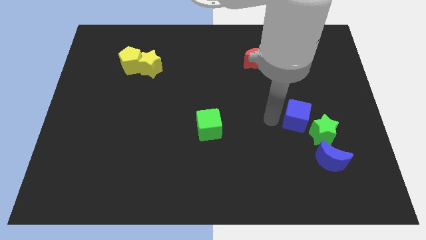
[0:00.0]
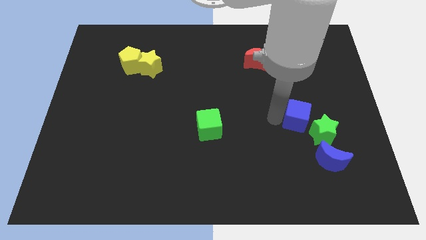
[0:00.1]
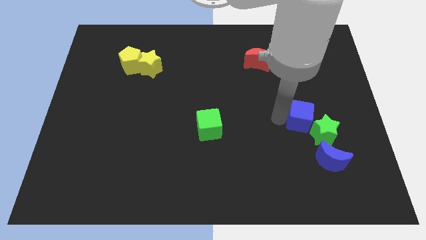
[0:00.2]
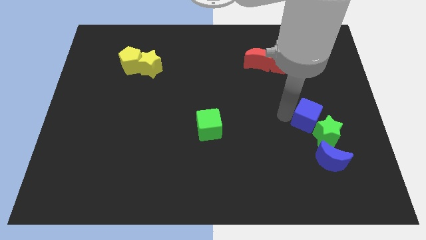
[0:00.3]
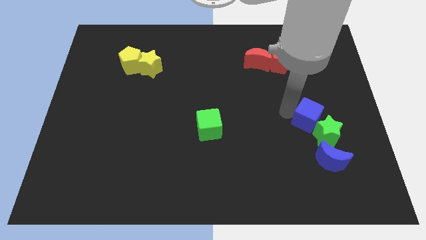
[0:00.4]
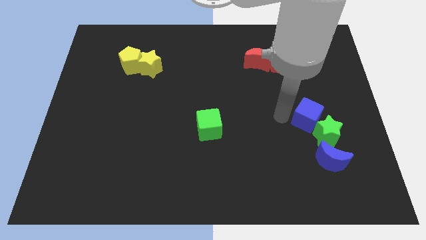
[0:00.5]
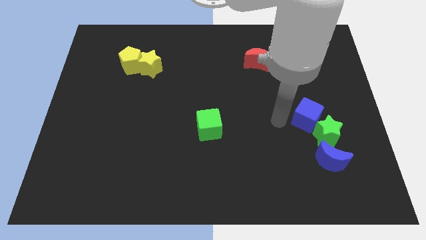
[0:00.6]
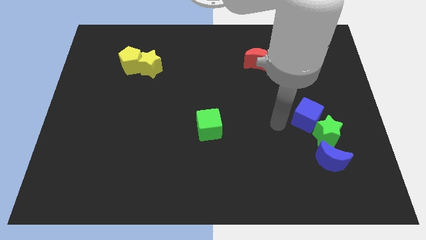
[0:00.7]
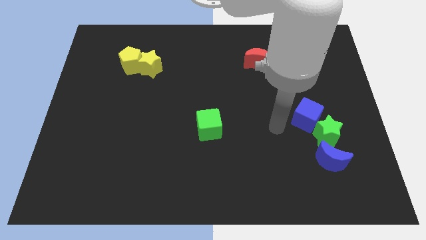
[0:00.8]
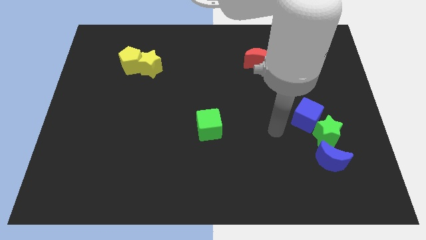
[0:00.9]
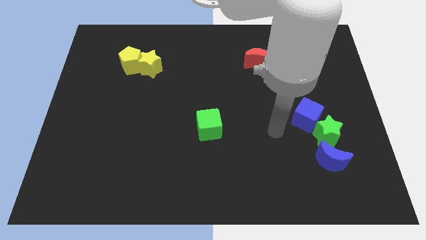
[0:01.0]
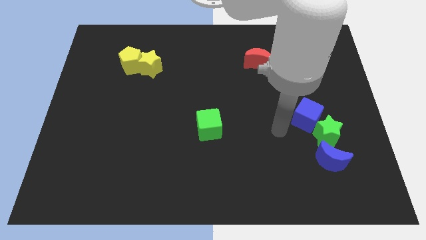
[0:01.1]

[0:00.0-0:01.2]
push blue block into green star

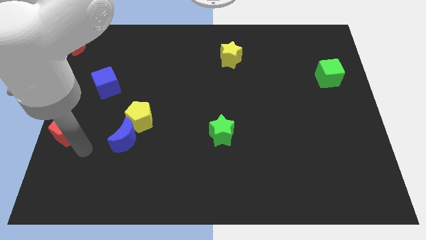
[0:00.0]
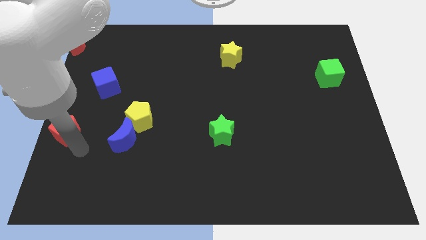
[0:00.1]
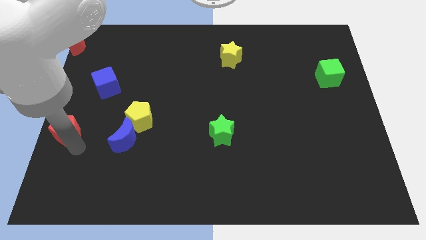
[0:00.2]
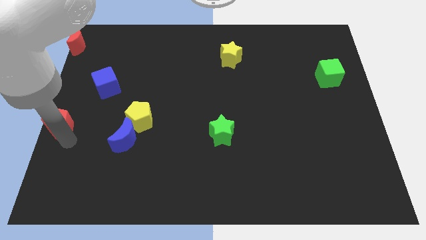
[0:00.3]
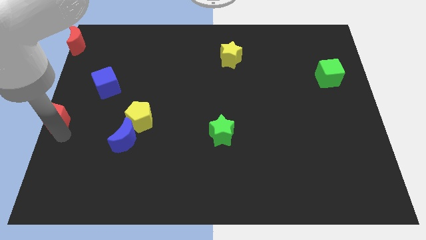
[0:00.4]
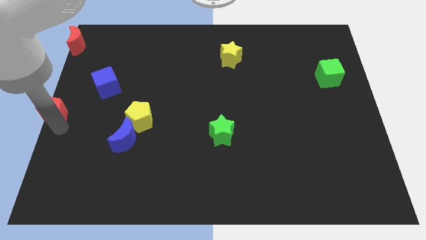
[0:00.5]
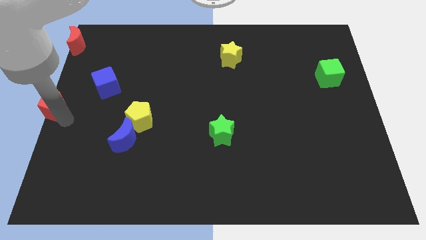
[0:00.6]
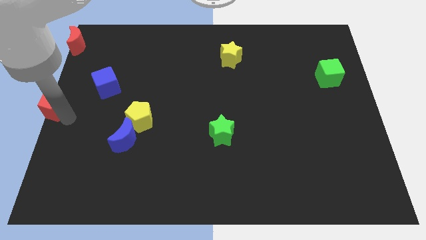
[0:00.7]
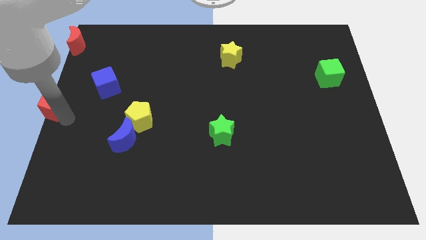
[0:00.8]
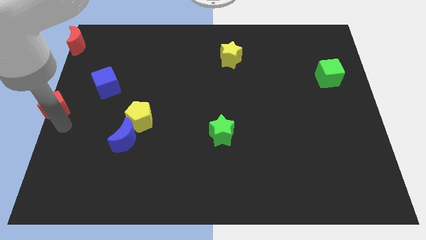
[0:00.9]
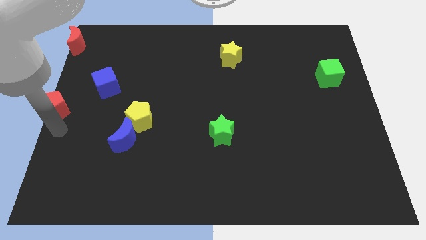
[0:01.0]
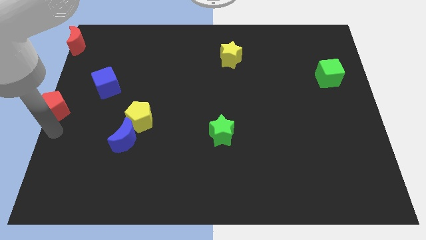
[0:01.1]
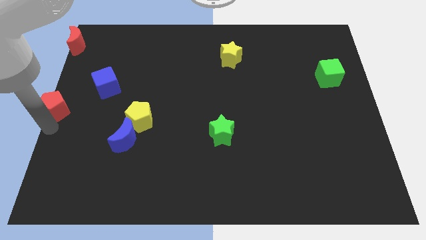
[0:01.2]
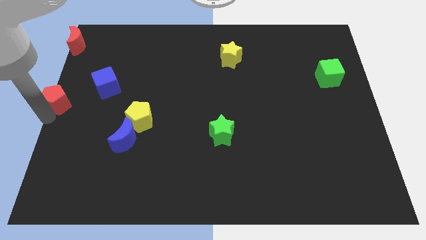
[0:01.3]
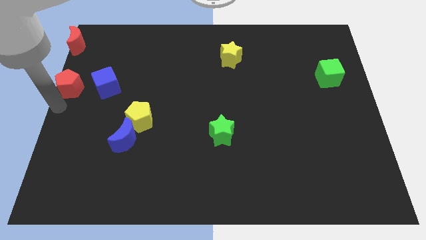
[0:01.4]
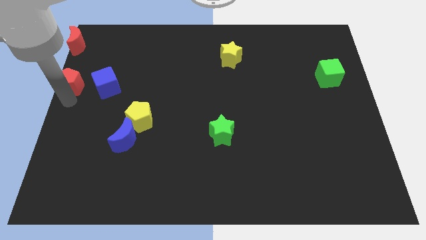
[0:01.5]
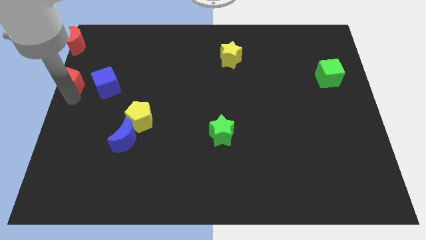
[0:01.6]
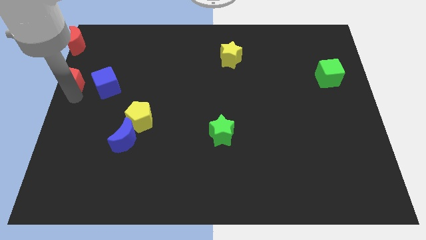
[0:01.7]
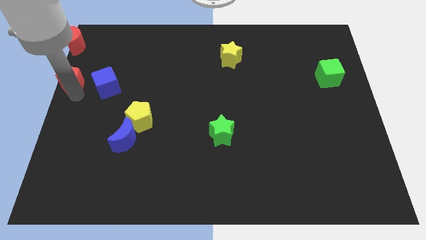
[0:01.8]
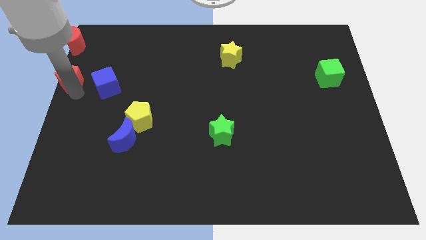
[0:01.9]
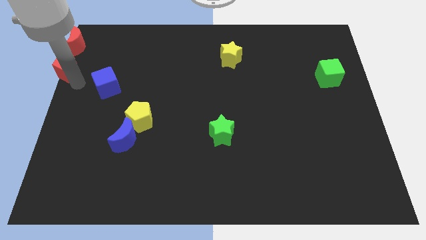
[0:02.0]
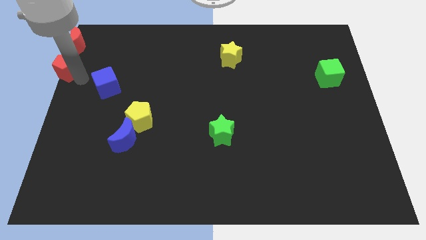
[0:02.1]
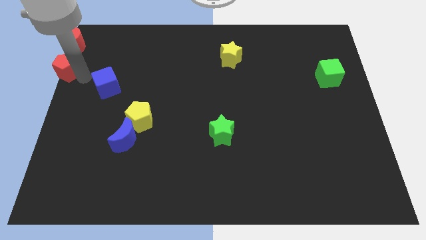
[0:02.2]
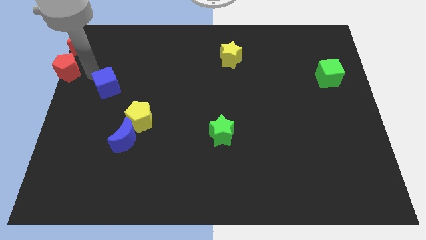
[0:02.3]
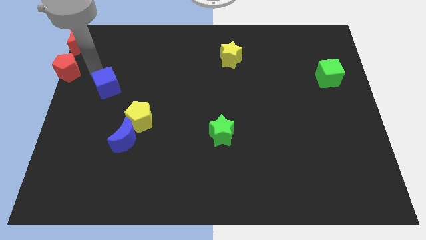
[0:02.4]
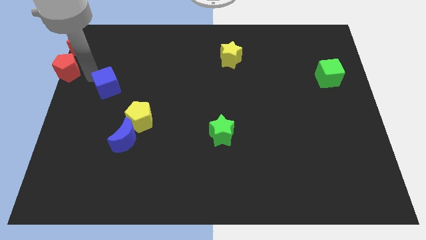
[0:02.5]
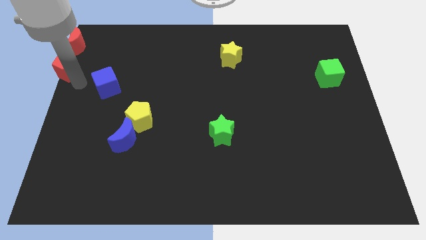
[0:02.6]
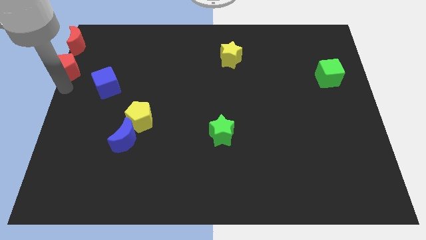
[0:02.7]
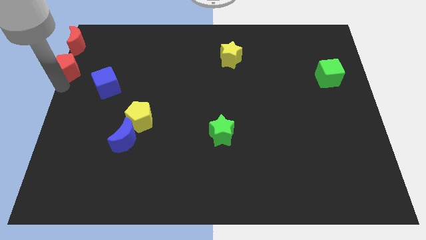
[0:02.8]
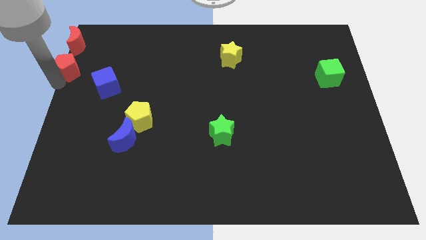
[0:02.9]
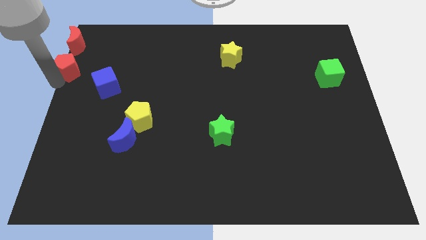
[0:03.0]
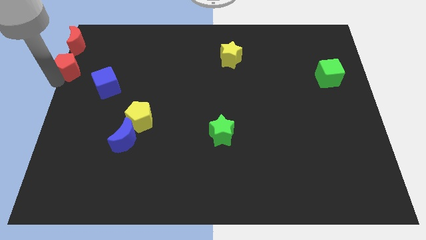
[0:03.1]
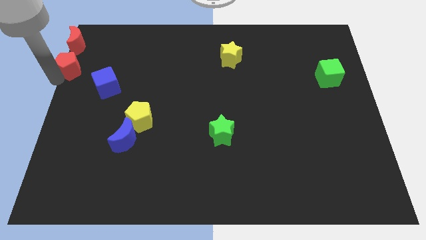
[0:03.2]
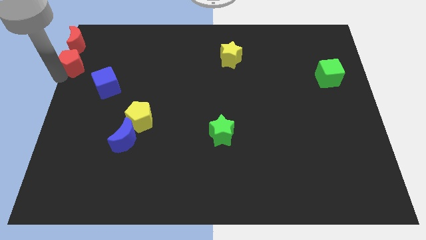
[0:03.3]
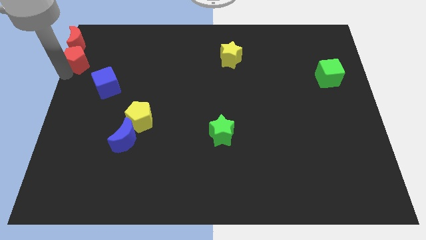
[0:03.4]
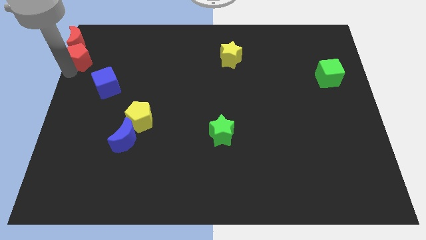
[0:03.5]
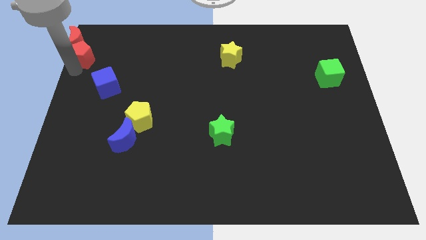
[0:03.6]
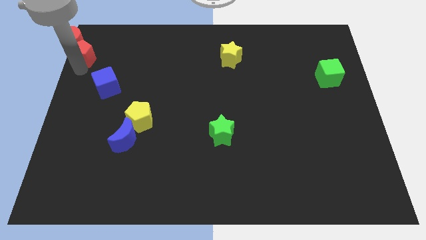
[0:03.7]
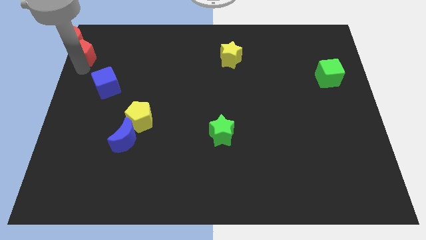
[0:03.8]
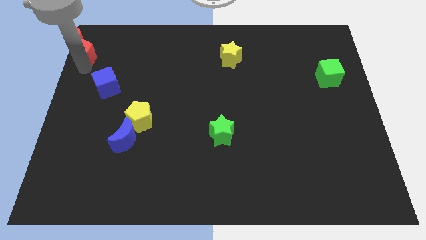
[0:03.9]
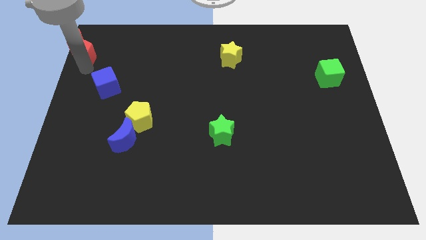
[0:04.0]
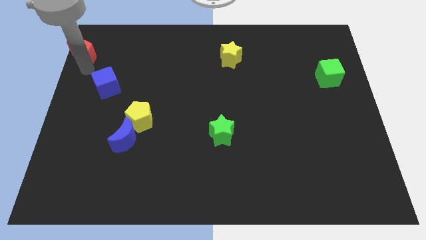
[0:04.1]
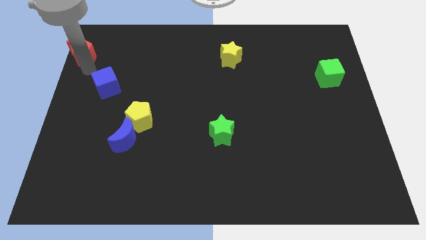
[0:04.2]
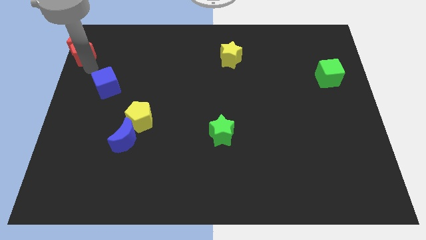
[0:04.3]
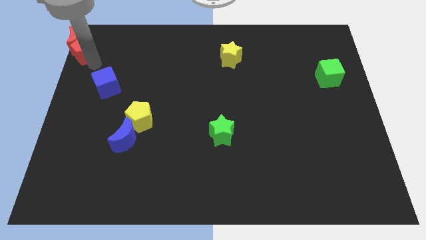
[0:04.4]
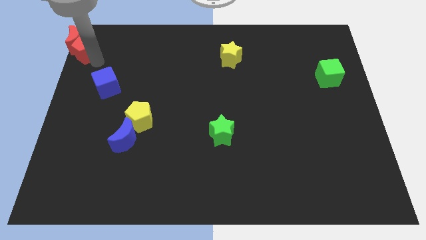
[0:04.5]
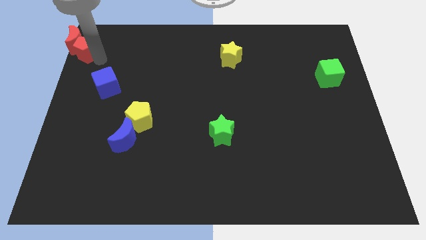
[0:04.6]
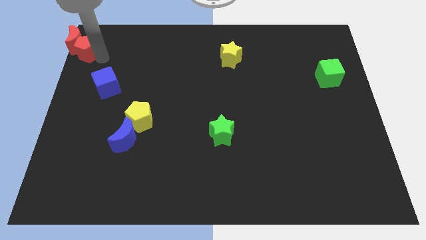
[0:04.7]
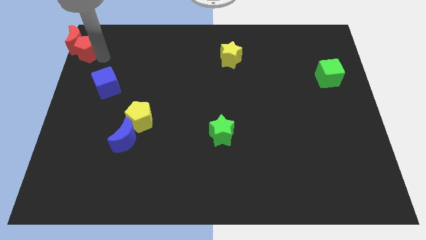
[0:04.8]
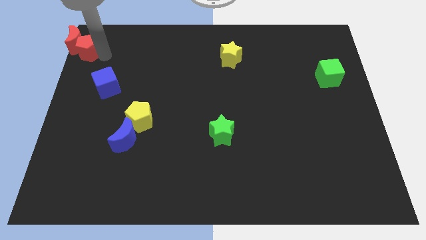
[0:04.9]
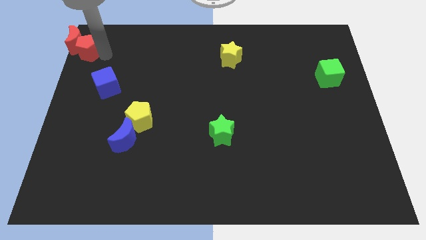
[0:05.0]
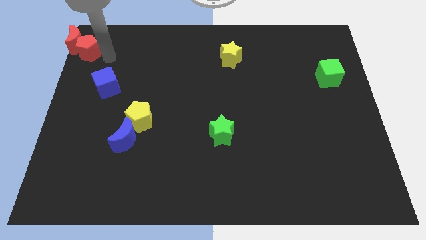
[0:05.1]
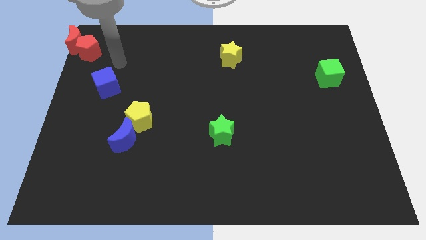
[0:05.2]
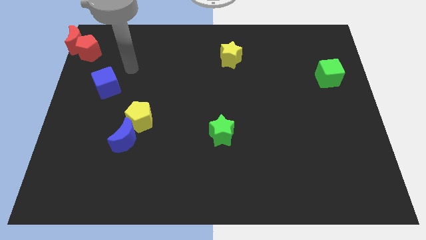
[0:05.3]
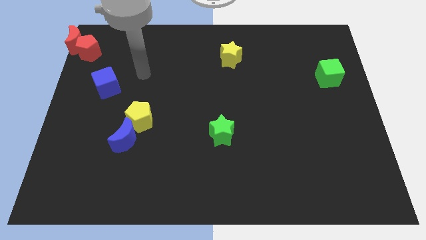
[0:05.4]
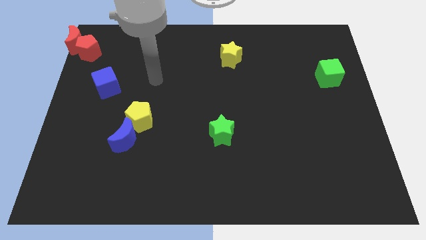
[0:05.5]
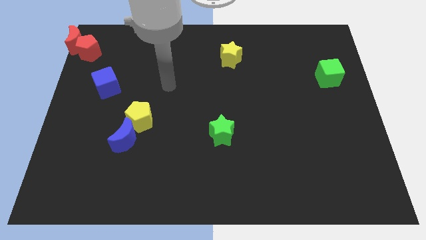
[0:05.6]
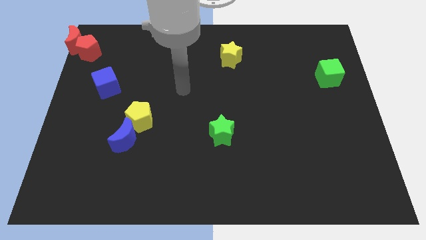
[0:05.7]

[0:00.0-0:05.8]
place red pentagon to the bottom of the red crescent

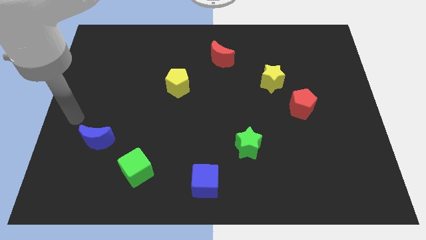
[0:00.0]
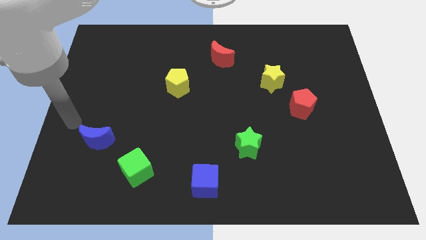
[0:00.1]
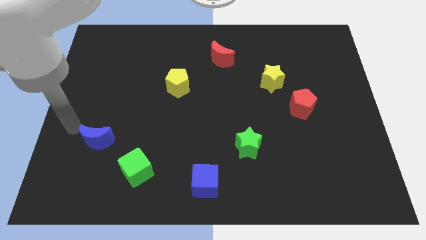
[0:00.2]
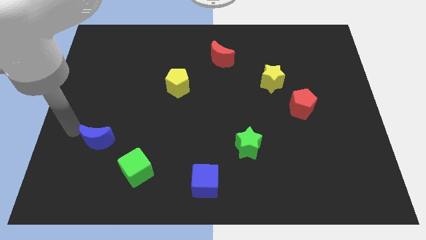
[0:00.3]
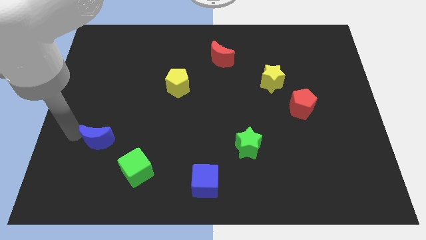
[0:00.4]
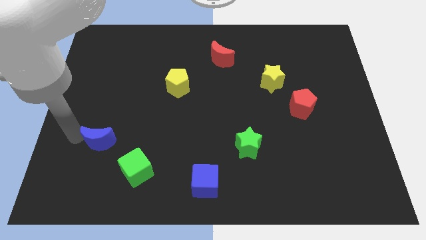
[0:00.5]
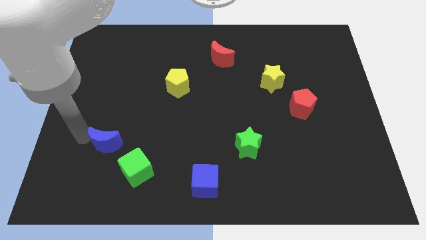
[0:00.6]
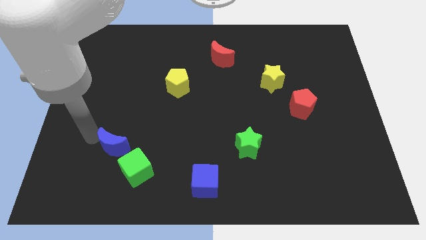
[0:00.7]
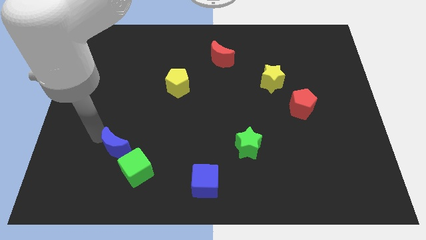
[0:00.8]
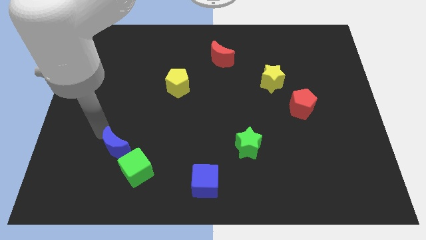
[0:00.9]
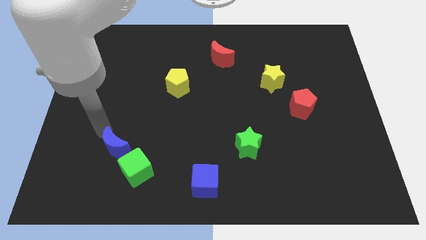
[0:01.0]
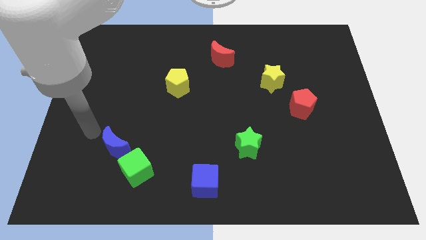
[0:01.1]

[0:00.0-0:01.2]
move the blue moon close to the green cube

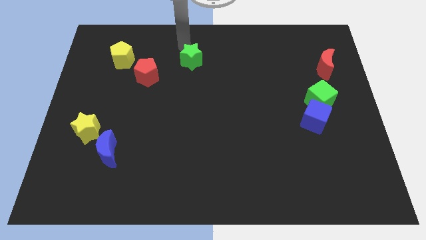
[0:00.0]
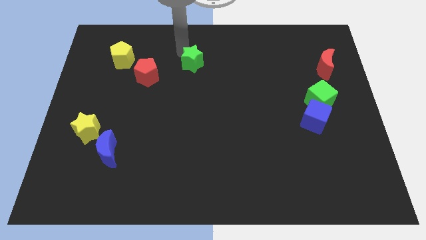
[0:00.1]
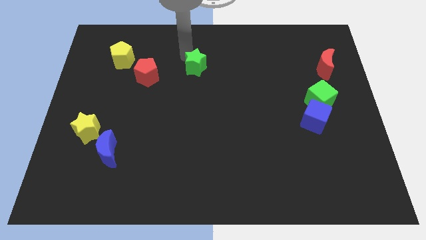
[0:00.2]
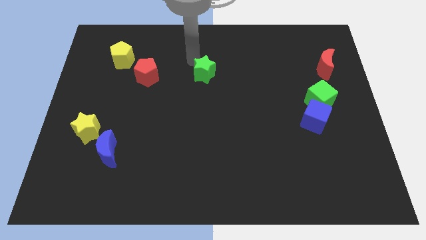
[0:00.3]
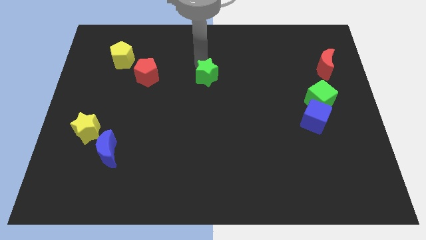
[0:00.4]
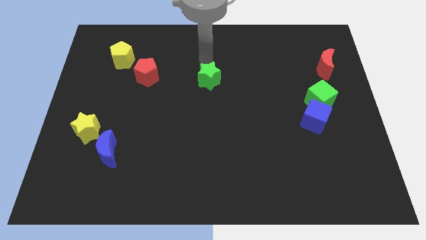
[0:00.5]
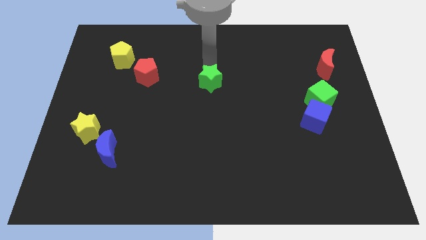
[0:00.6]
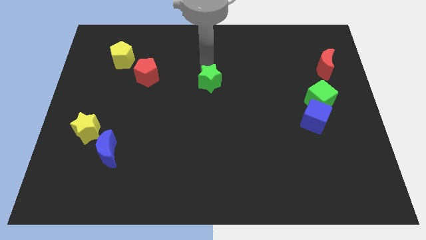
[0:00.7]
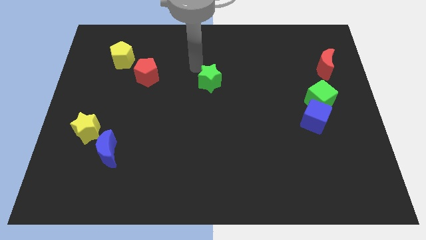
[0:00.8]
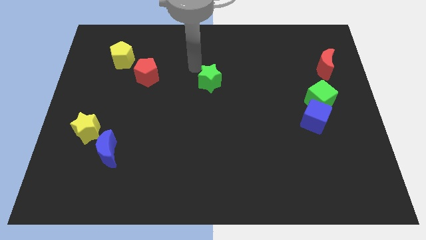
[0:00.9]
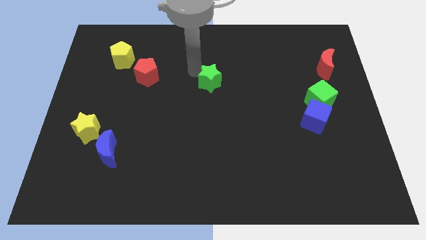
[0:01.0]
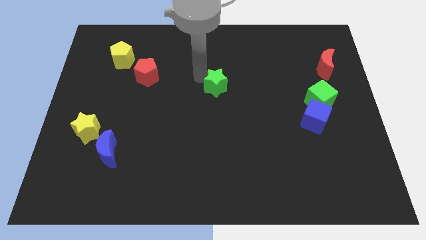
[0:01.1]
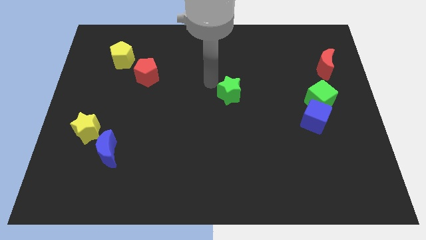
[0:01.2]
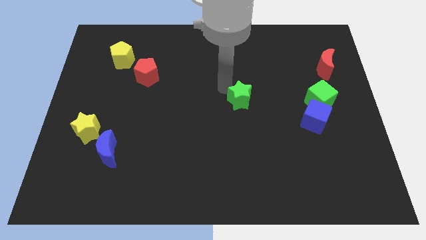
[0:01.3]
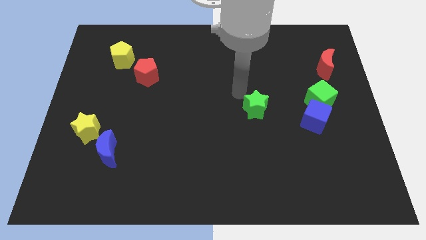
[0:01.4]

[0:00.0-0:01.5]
move the green star vertical parallel to the green cube
